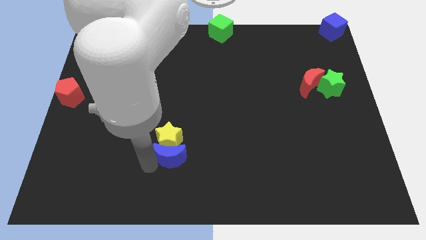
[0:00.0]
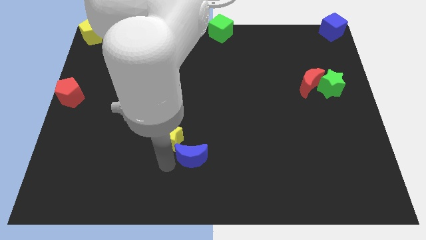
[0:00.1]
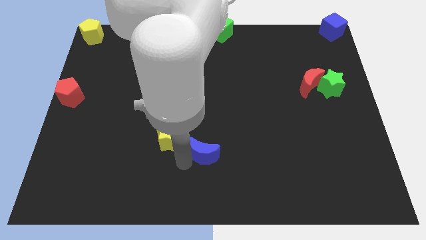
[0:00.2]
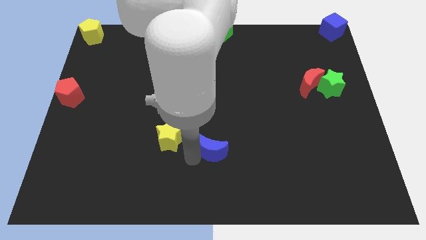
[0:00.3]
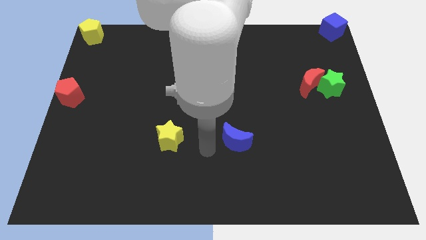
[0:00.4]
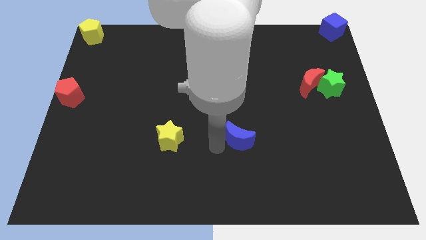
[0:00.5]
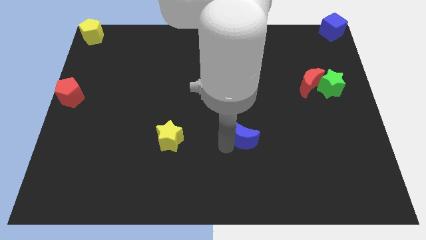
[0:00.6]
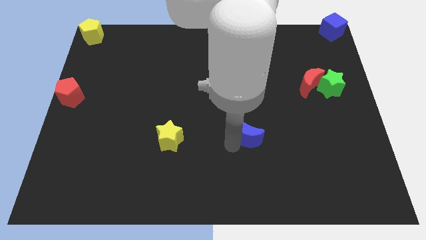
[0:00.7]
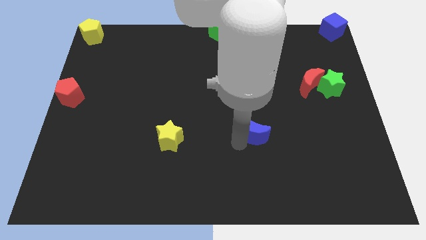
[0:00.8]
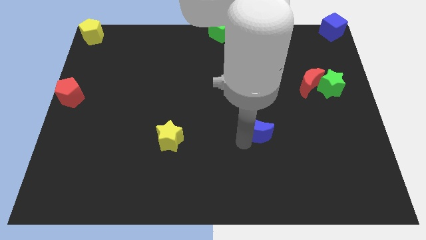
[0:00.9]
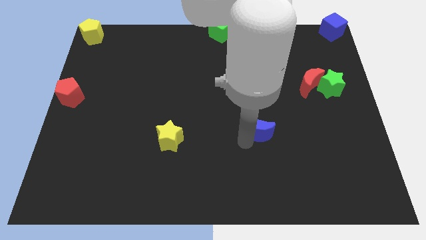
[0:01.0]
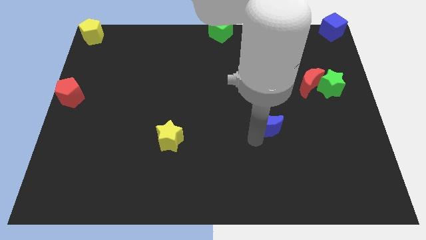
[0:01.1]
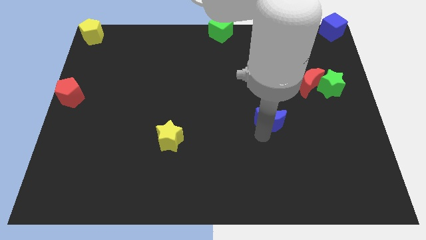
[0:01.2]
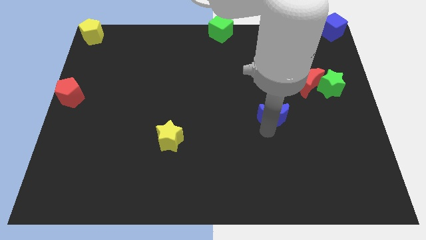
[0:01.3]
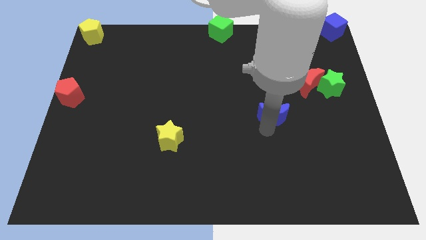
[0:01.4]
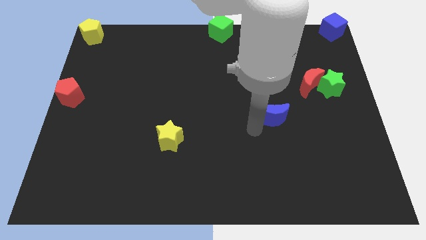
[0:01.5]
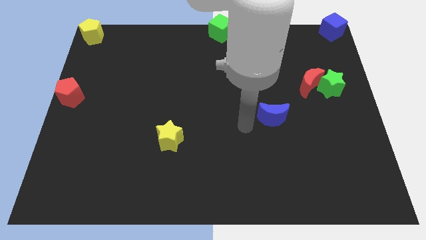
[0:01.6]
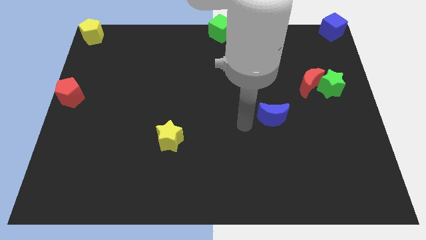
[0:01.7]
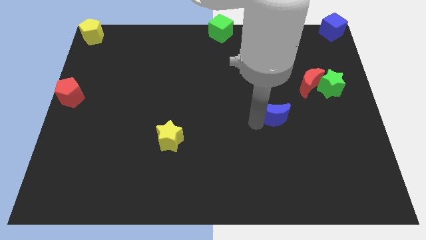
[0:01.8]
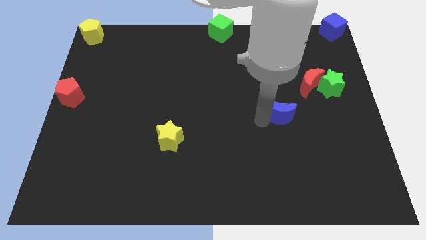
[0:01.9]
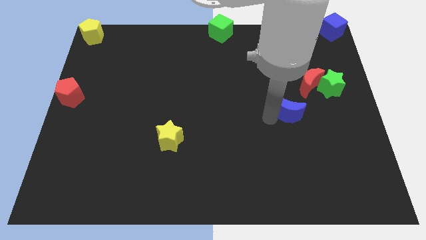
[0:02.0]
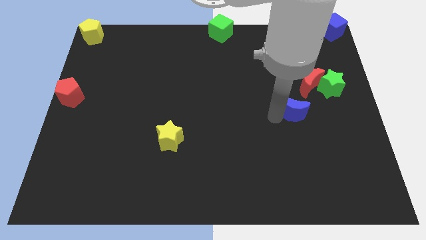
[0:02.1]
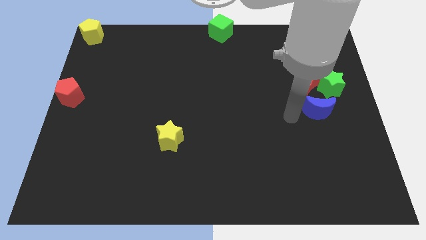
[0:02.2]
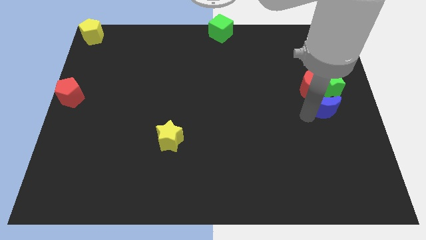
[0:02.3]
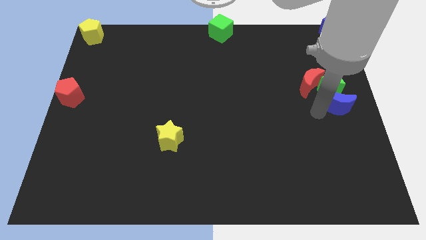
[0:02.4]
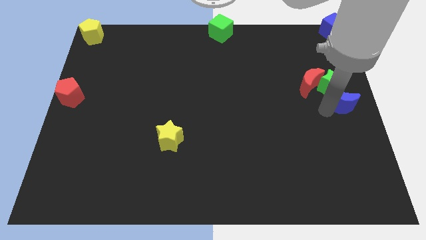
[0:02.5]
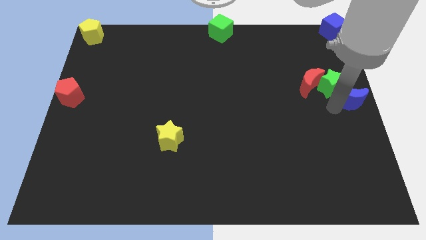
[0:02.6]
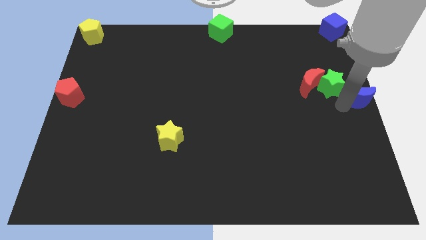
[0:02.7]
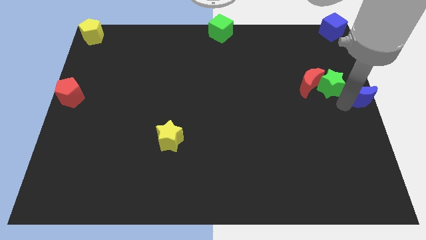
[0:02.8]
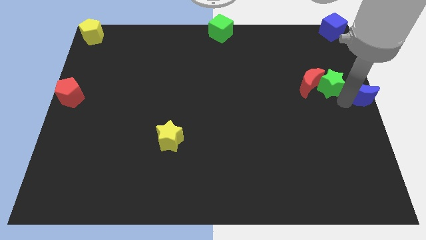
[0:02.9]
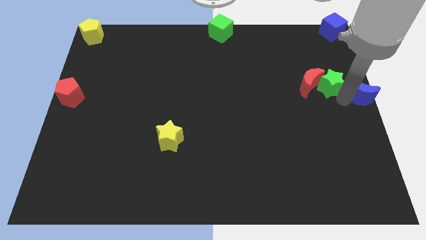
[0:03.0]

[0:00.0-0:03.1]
move the blue moon to the right side of the green star

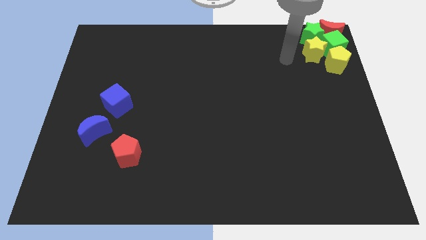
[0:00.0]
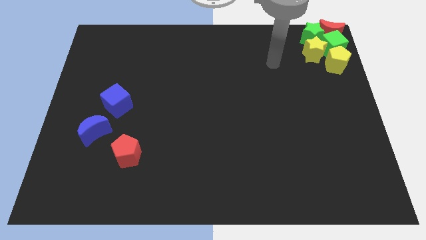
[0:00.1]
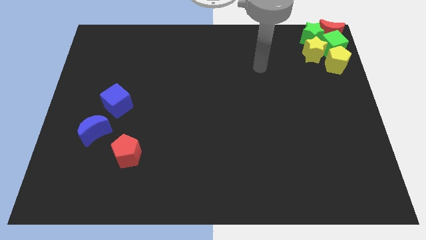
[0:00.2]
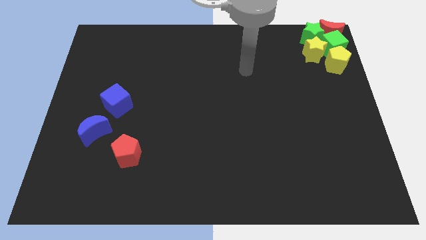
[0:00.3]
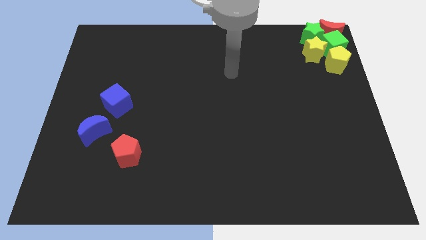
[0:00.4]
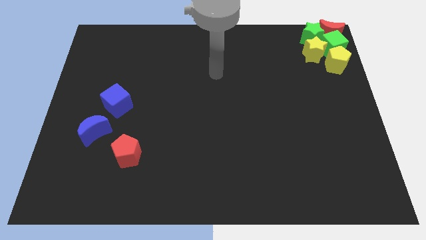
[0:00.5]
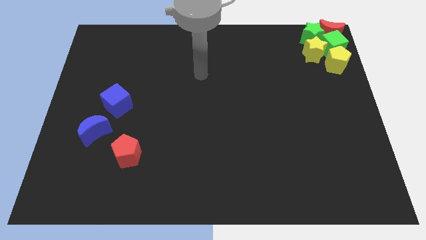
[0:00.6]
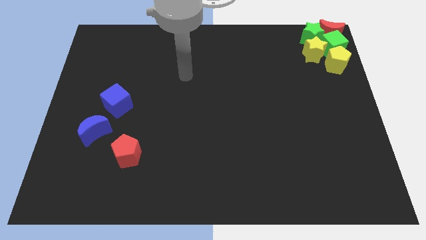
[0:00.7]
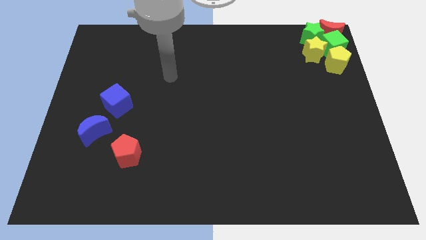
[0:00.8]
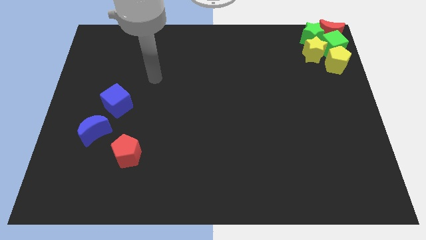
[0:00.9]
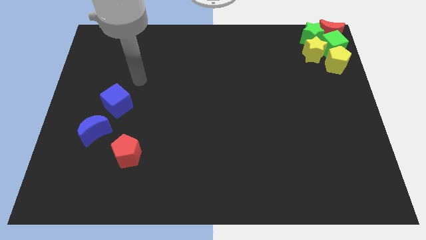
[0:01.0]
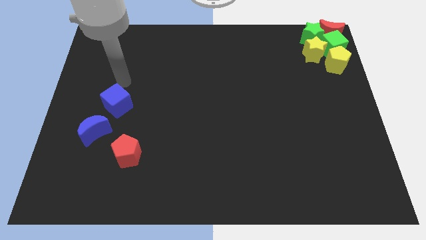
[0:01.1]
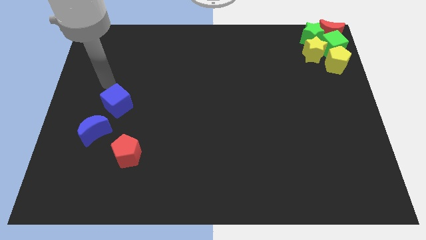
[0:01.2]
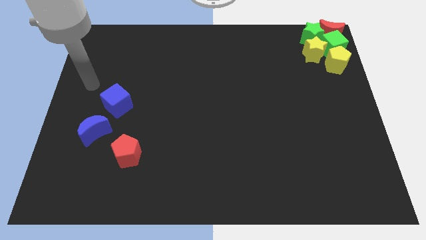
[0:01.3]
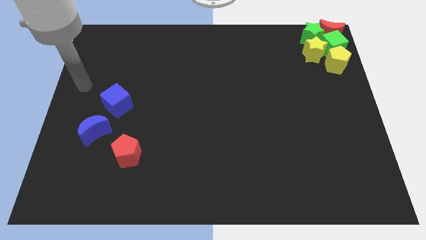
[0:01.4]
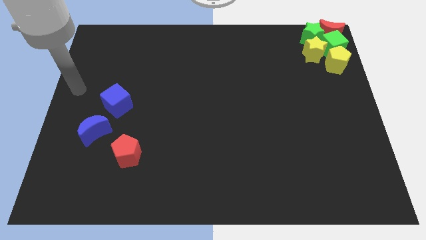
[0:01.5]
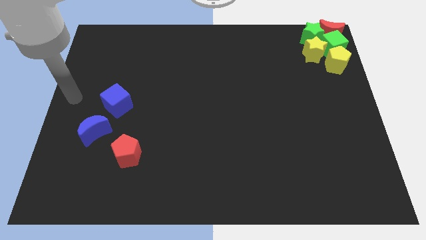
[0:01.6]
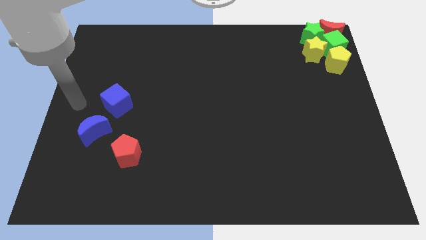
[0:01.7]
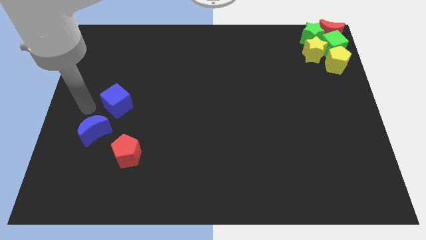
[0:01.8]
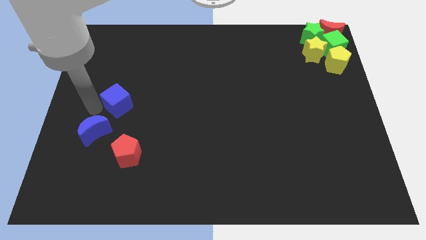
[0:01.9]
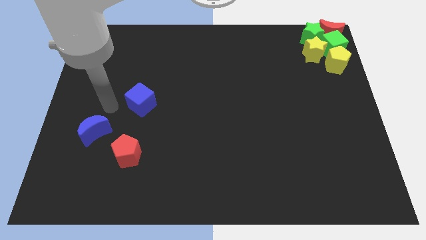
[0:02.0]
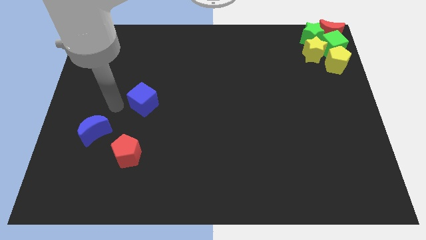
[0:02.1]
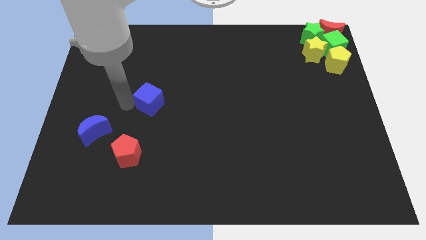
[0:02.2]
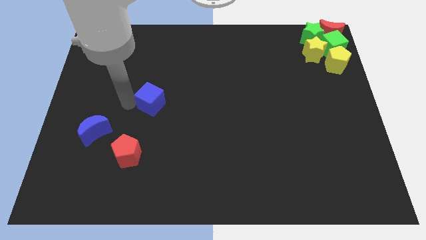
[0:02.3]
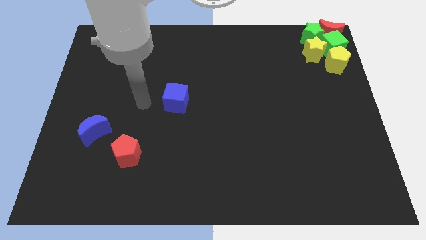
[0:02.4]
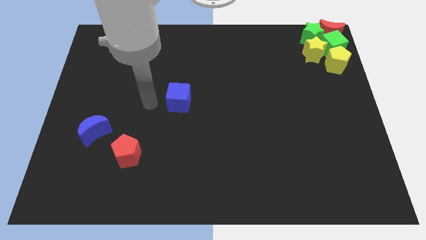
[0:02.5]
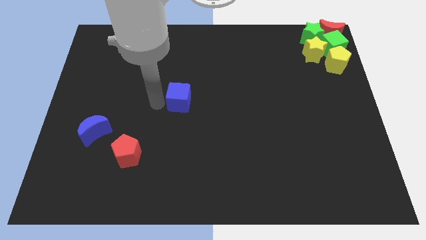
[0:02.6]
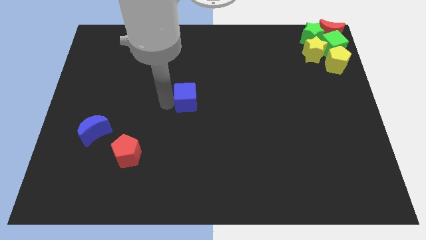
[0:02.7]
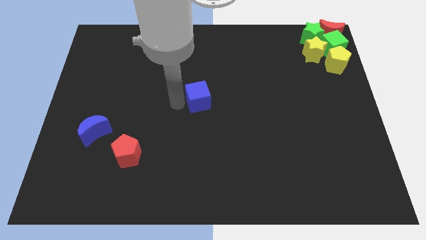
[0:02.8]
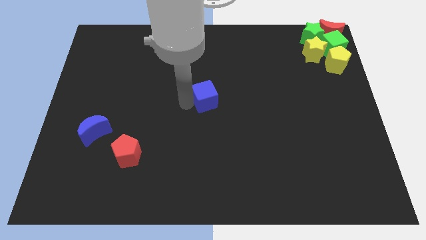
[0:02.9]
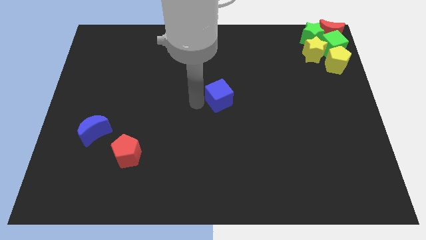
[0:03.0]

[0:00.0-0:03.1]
move the blue cube towards the center of the board

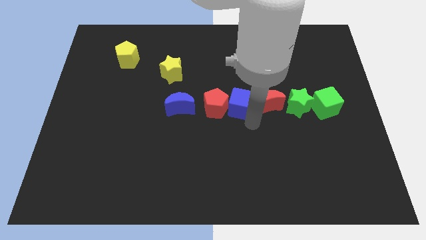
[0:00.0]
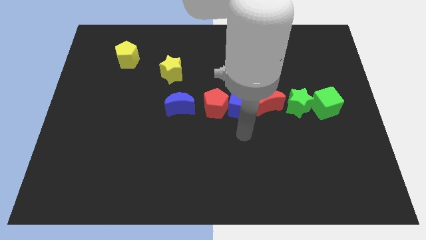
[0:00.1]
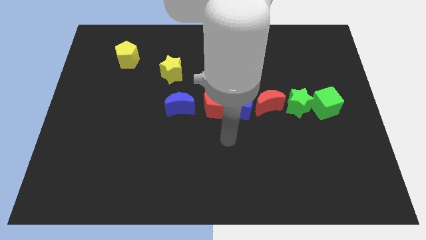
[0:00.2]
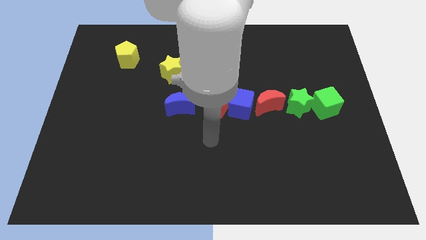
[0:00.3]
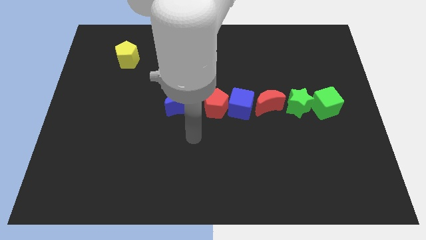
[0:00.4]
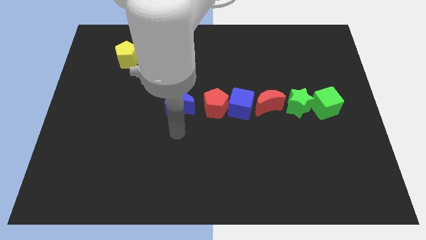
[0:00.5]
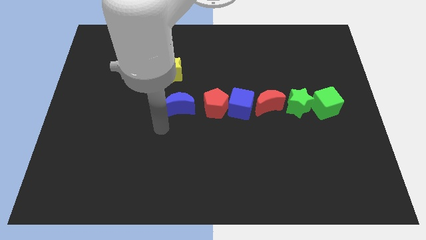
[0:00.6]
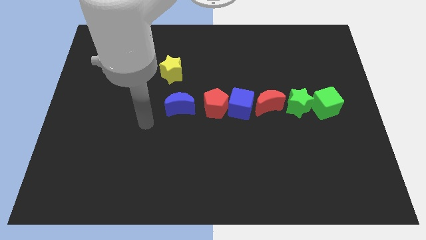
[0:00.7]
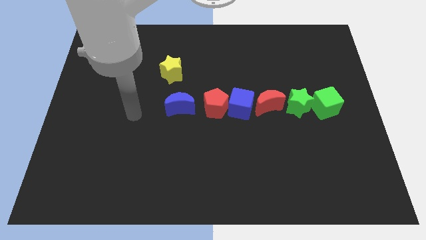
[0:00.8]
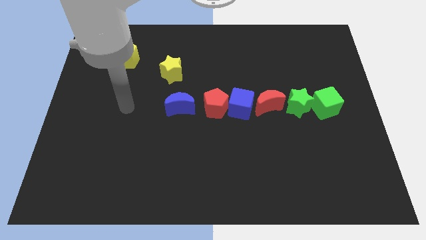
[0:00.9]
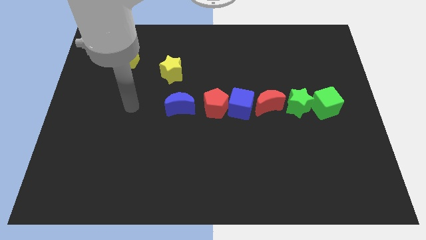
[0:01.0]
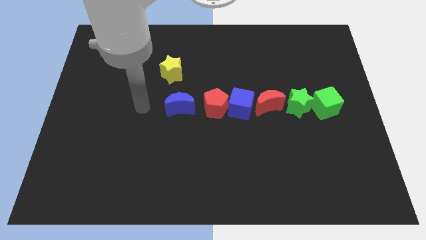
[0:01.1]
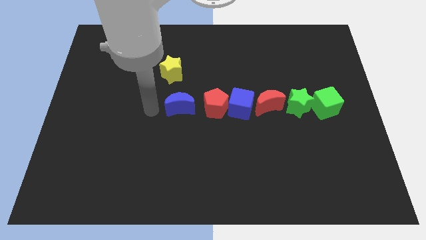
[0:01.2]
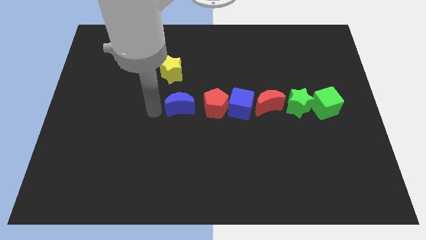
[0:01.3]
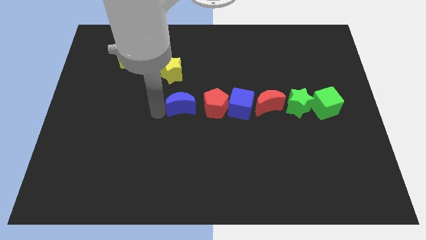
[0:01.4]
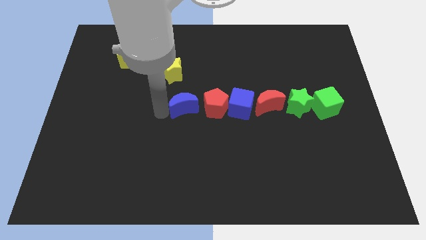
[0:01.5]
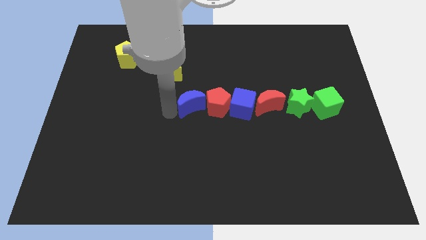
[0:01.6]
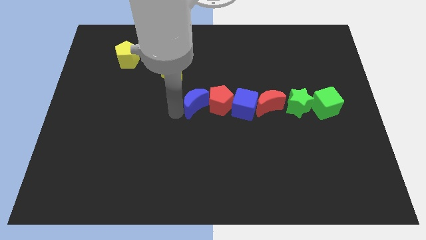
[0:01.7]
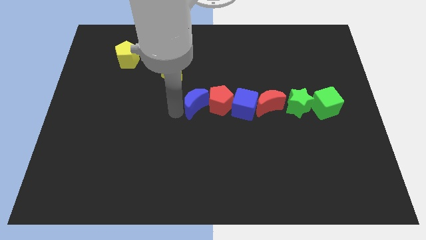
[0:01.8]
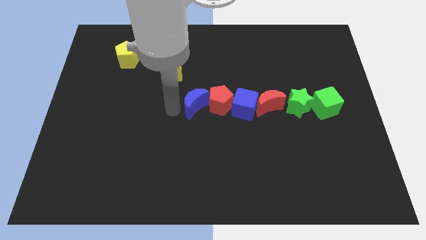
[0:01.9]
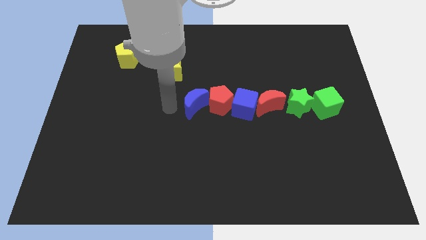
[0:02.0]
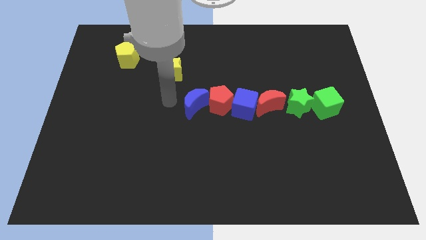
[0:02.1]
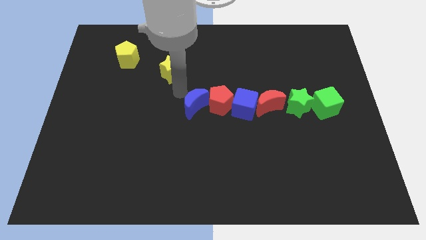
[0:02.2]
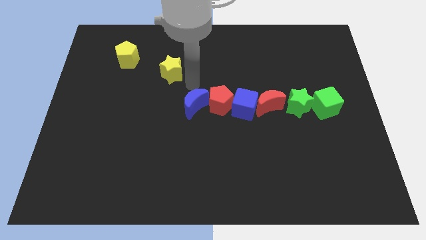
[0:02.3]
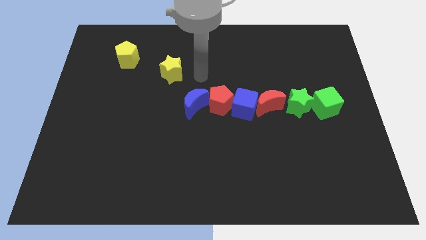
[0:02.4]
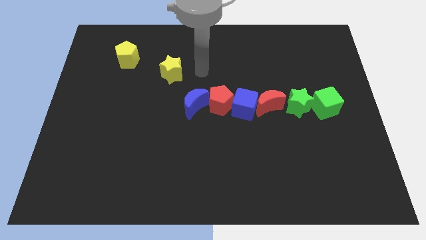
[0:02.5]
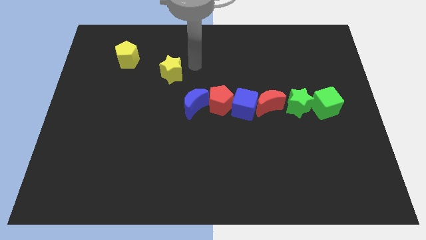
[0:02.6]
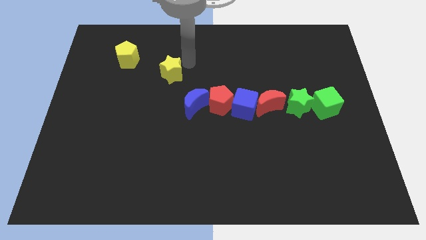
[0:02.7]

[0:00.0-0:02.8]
push the blue crescent into red pentagon

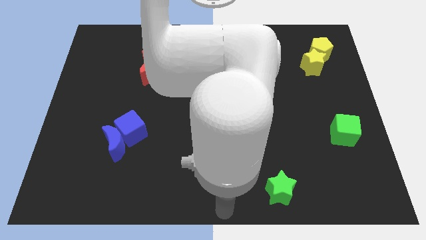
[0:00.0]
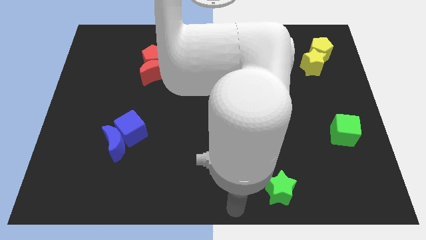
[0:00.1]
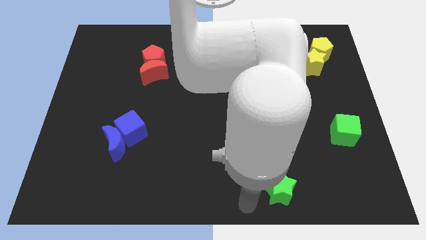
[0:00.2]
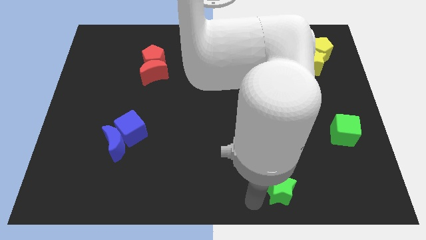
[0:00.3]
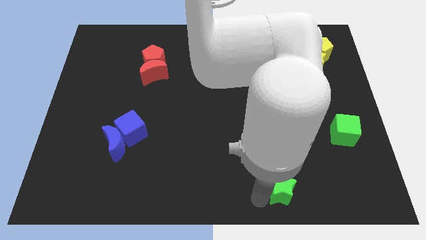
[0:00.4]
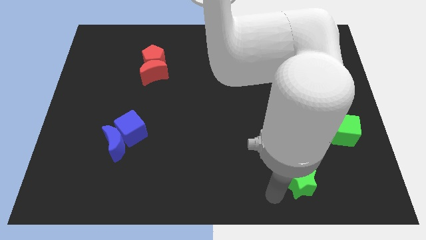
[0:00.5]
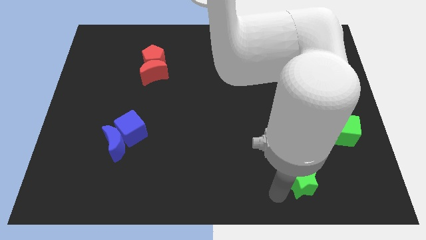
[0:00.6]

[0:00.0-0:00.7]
place the green star diagonally to the green cube
